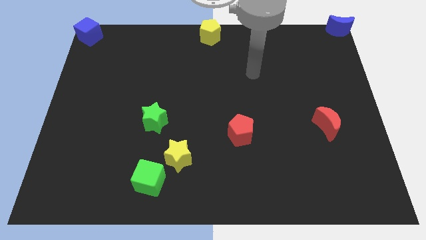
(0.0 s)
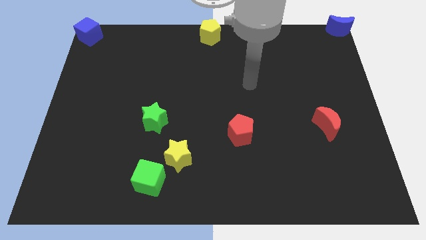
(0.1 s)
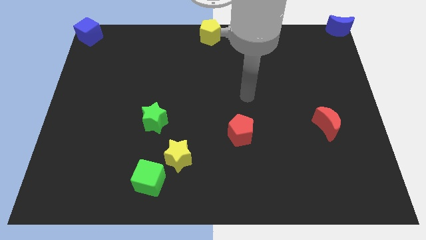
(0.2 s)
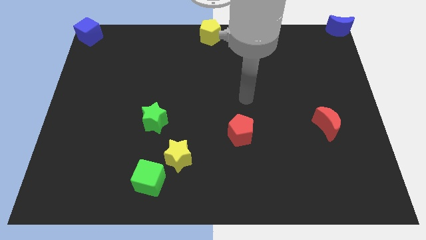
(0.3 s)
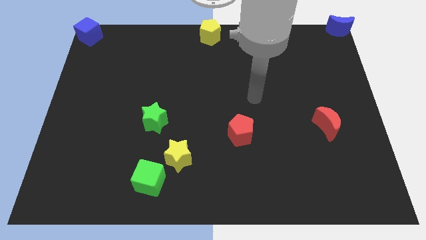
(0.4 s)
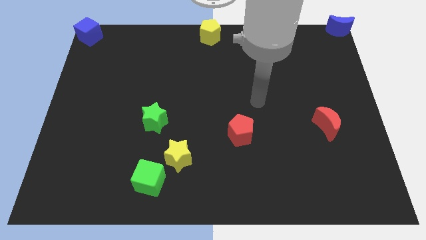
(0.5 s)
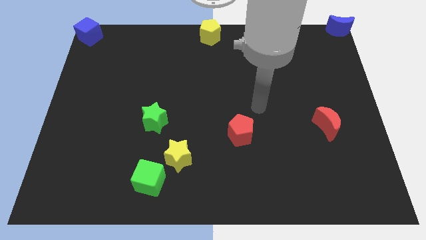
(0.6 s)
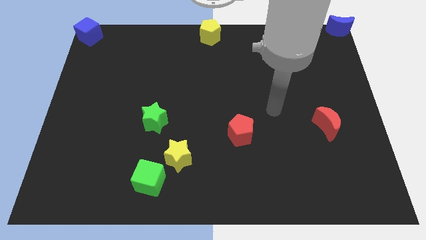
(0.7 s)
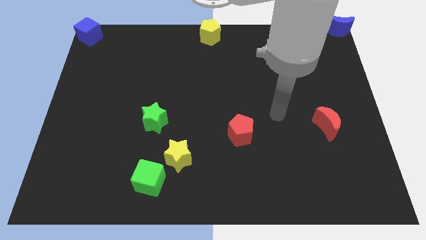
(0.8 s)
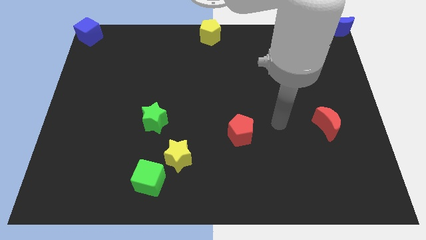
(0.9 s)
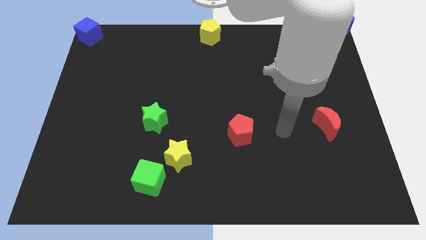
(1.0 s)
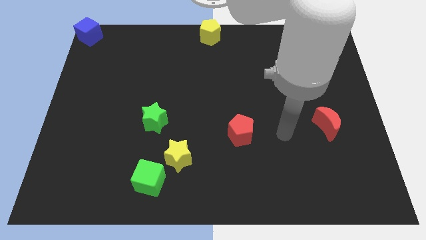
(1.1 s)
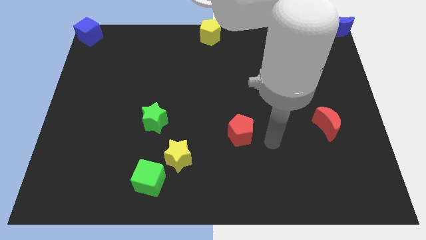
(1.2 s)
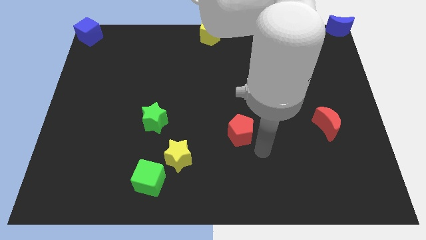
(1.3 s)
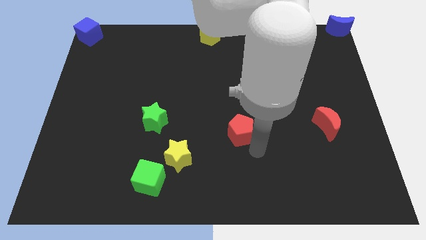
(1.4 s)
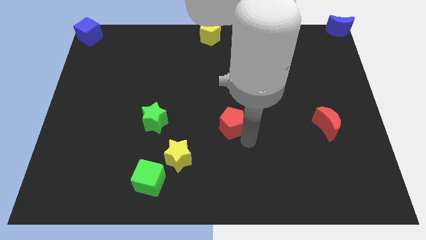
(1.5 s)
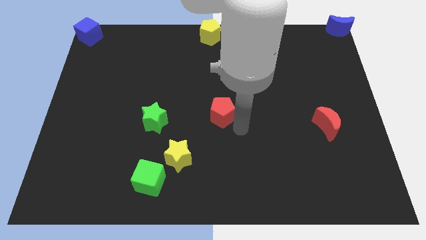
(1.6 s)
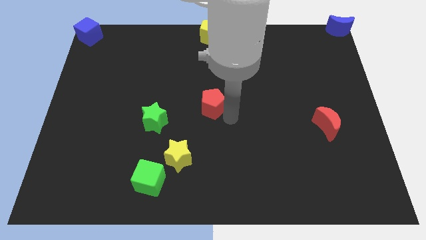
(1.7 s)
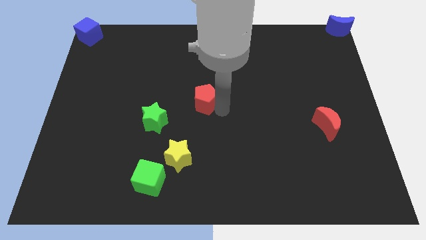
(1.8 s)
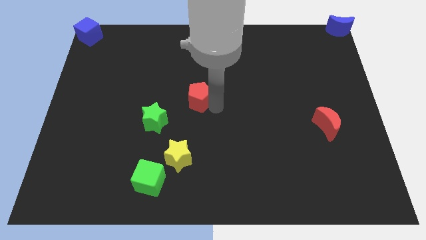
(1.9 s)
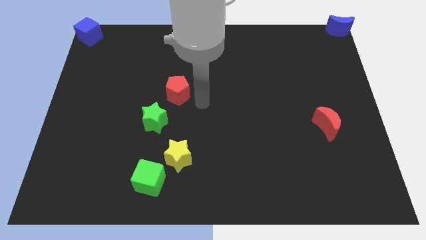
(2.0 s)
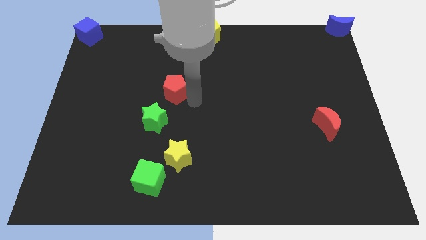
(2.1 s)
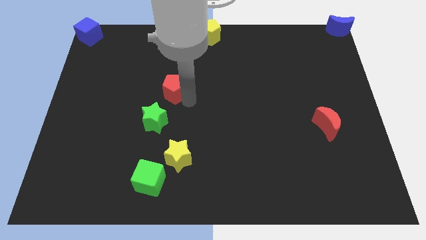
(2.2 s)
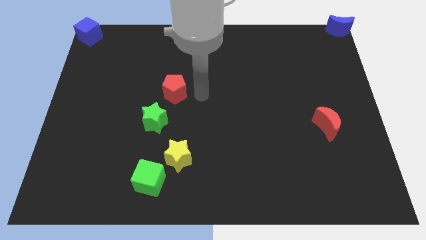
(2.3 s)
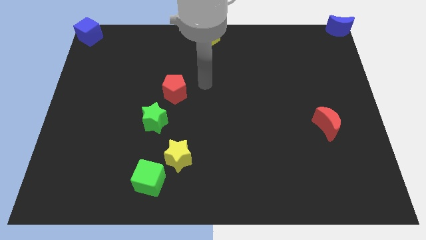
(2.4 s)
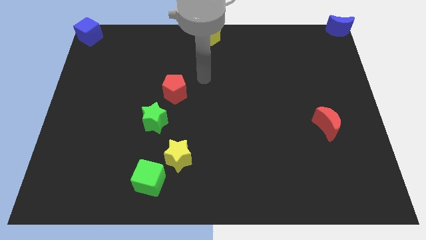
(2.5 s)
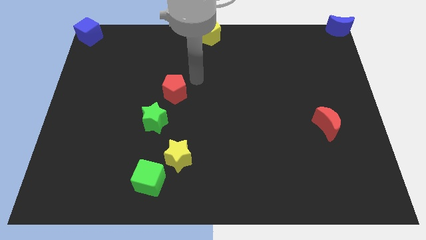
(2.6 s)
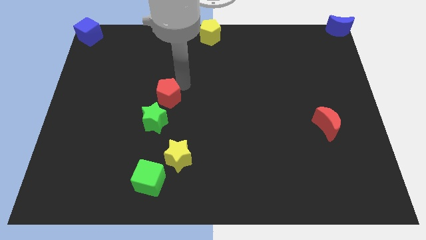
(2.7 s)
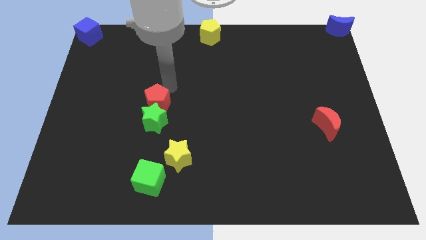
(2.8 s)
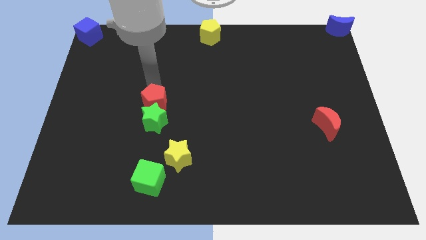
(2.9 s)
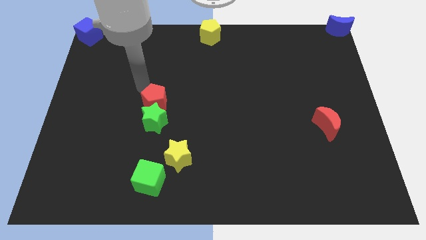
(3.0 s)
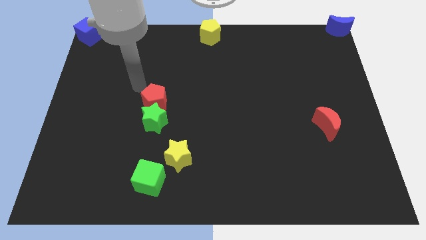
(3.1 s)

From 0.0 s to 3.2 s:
place the red pentagon on top of the green star

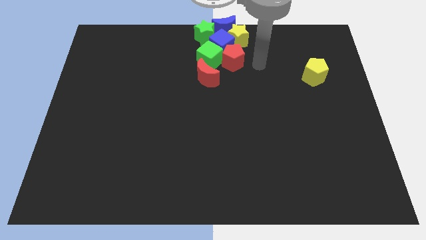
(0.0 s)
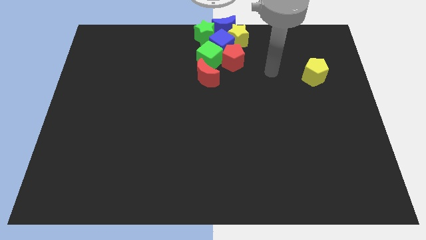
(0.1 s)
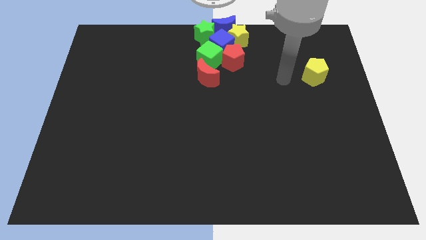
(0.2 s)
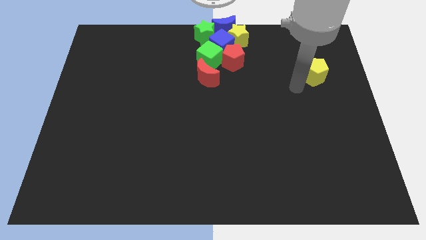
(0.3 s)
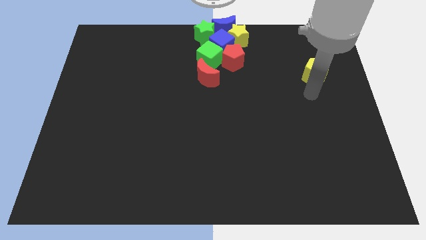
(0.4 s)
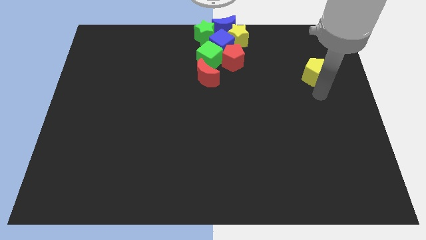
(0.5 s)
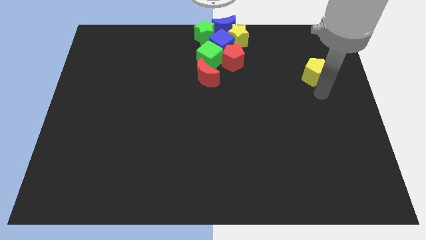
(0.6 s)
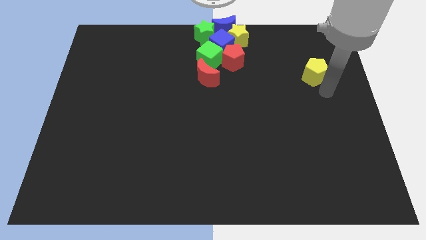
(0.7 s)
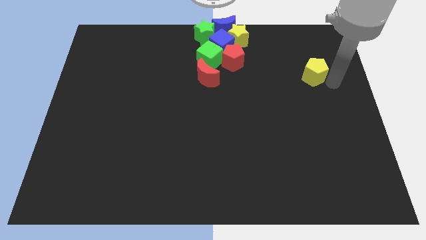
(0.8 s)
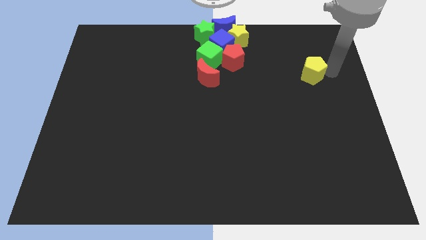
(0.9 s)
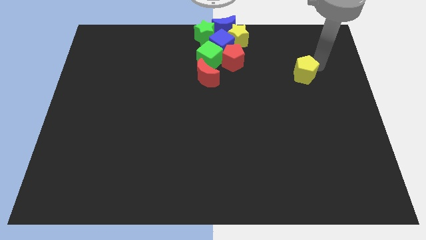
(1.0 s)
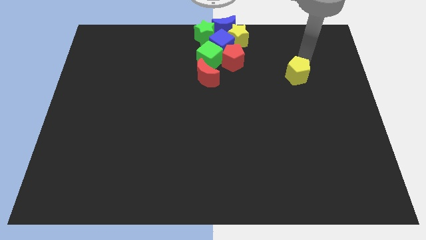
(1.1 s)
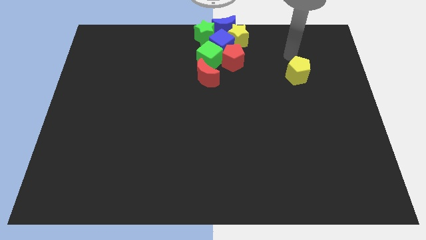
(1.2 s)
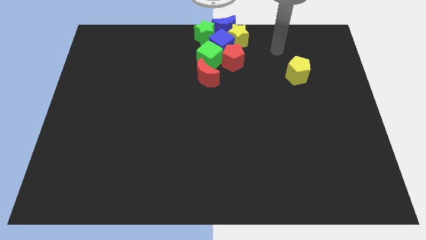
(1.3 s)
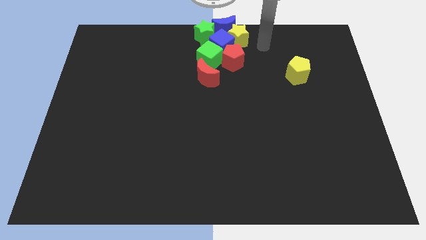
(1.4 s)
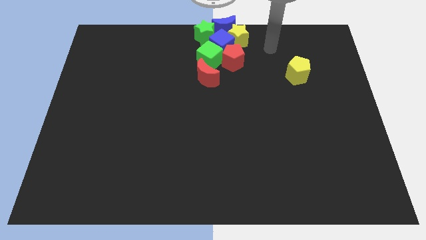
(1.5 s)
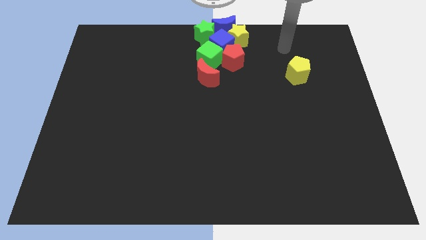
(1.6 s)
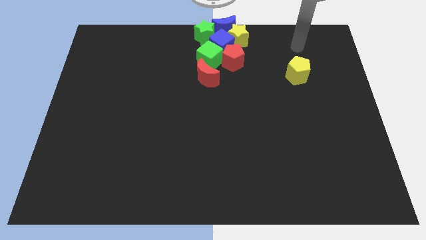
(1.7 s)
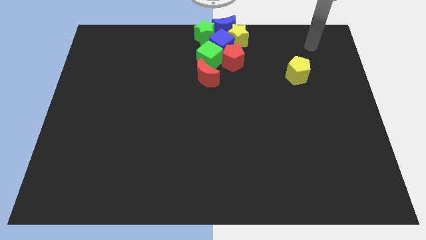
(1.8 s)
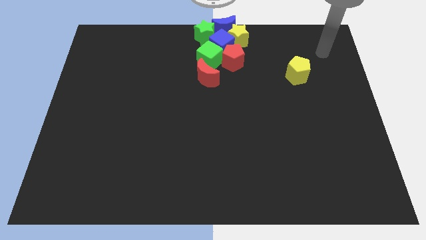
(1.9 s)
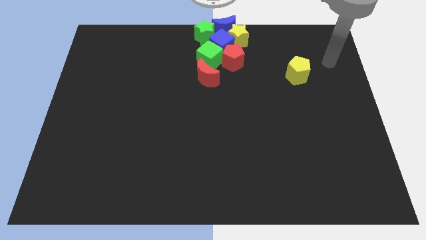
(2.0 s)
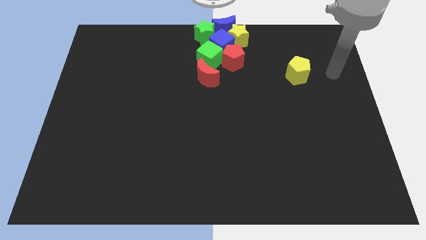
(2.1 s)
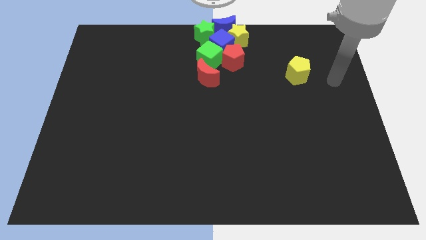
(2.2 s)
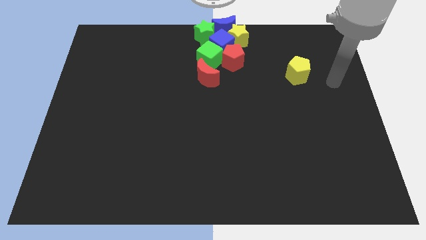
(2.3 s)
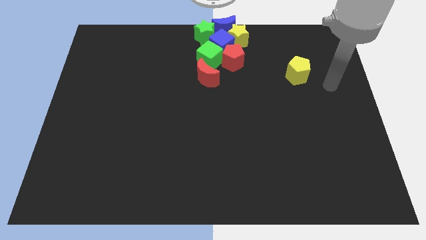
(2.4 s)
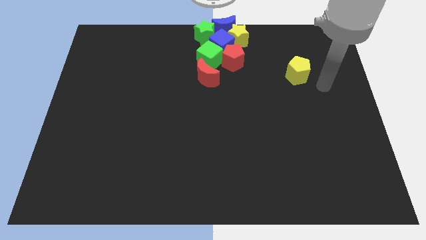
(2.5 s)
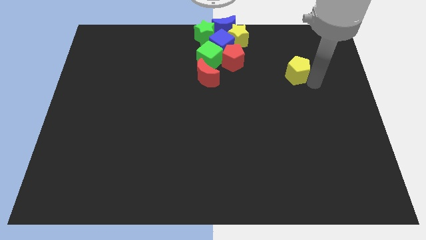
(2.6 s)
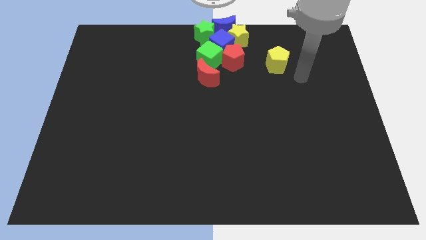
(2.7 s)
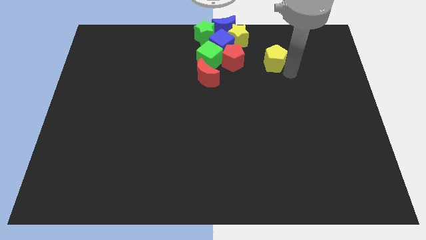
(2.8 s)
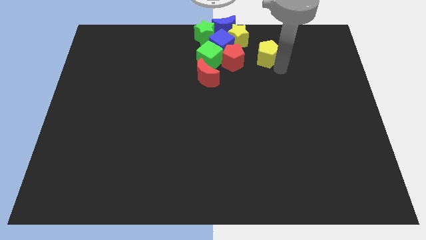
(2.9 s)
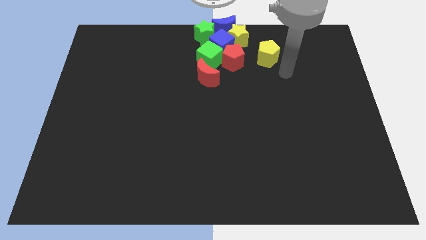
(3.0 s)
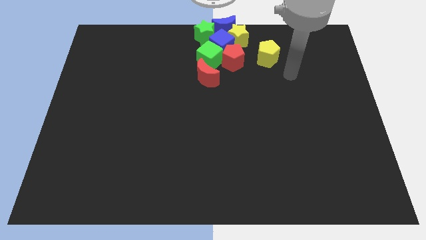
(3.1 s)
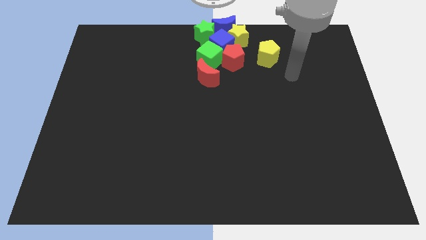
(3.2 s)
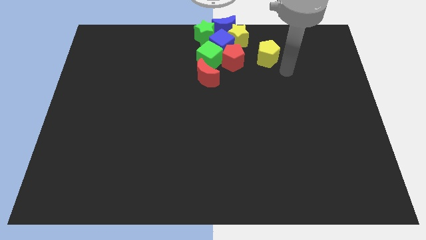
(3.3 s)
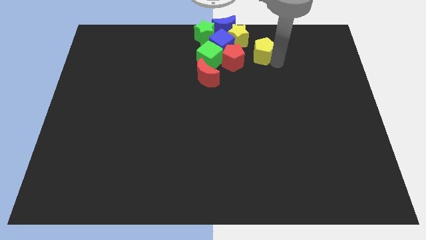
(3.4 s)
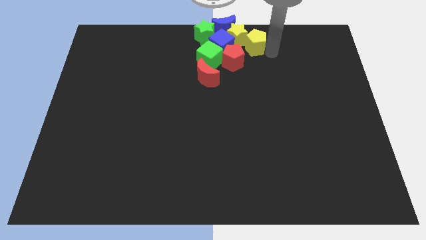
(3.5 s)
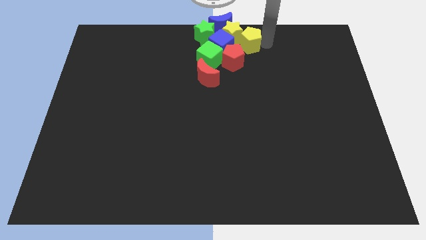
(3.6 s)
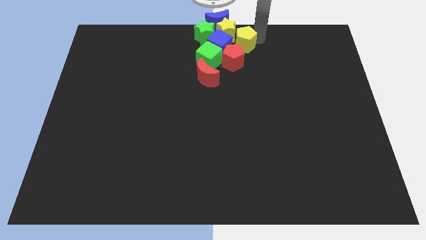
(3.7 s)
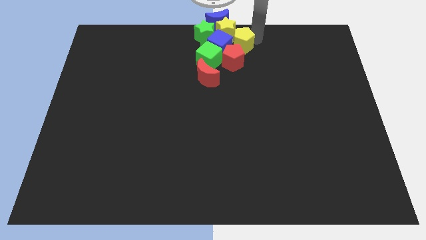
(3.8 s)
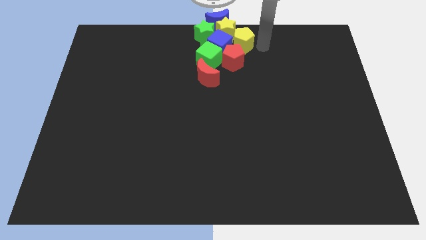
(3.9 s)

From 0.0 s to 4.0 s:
push the yellow pentagon into the yellow star towards the top center of the board

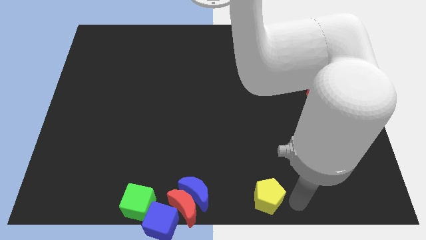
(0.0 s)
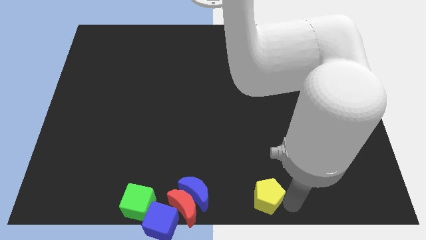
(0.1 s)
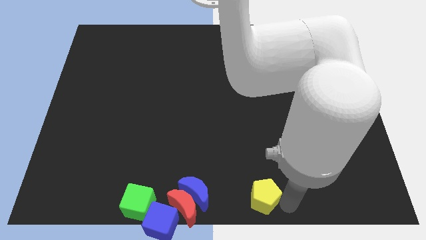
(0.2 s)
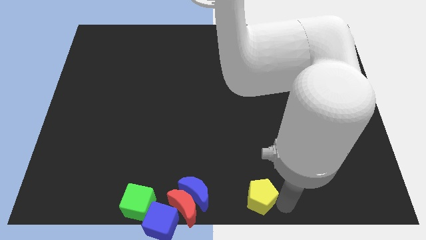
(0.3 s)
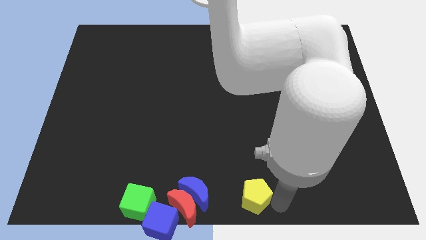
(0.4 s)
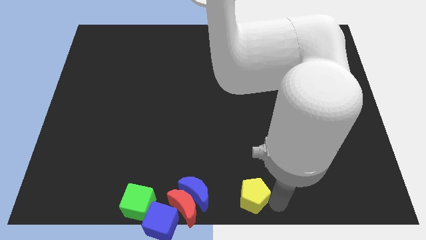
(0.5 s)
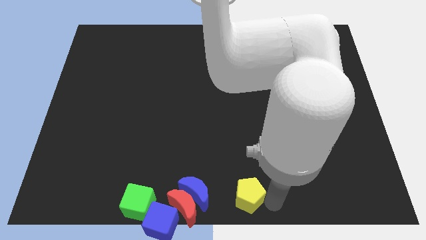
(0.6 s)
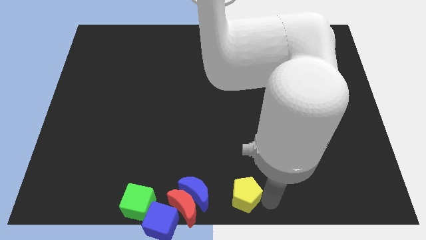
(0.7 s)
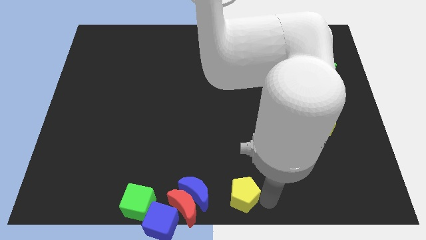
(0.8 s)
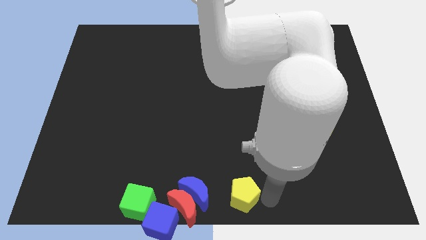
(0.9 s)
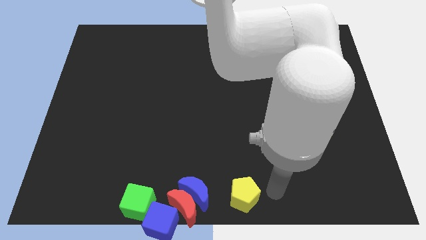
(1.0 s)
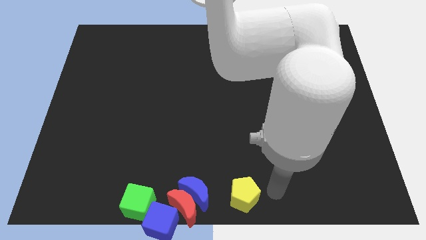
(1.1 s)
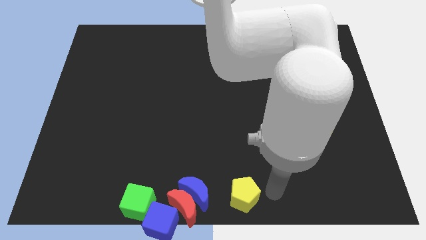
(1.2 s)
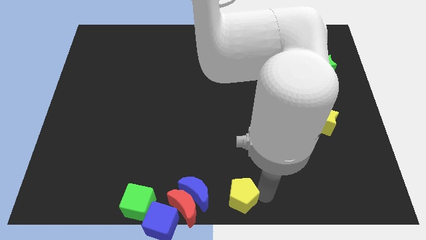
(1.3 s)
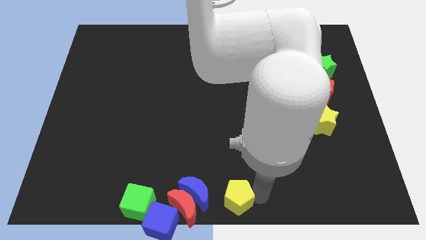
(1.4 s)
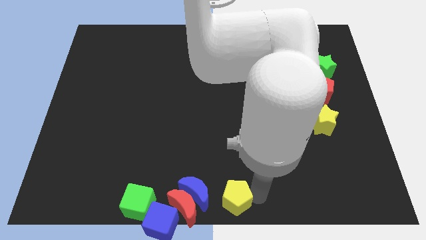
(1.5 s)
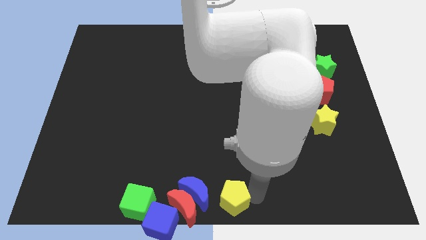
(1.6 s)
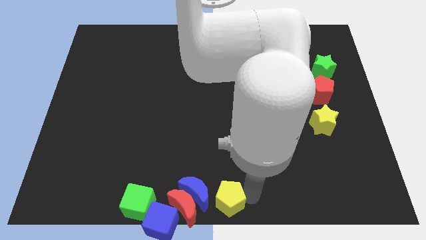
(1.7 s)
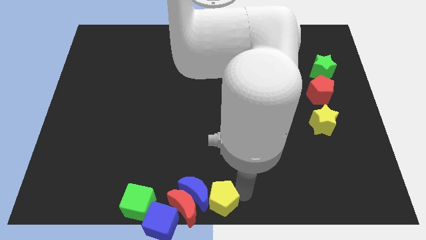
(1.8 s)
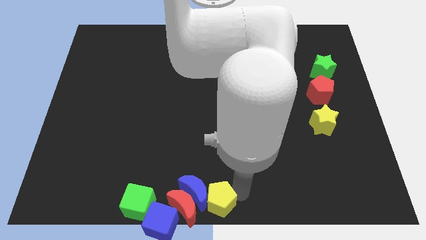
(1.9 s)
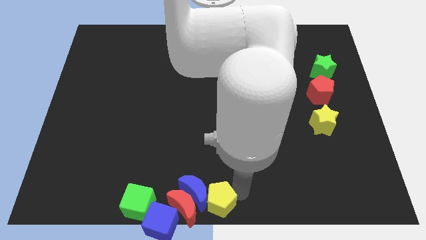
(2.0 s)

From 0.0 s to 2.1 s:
move the yellow pentagon into the blue crescent
